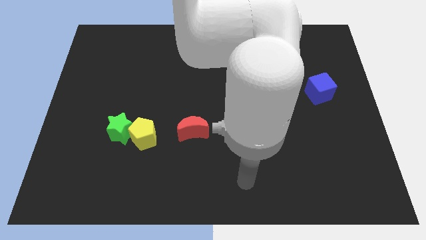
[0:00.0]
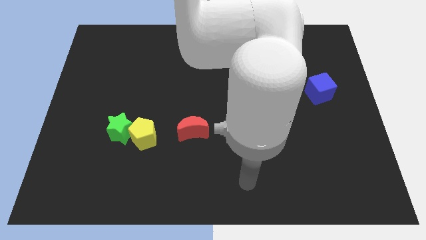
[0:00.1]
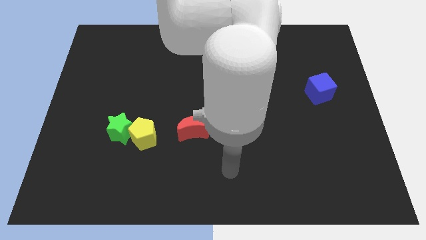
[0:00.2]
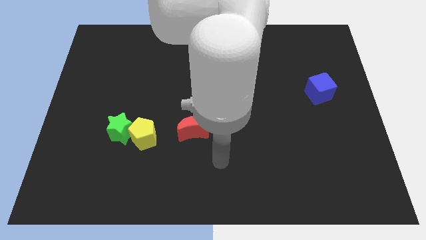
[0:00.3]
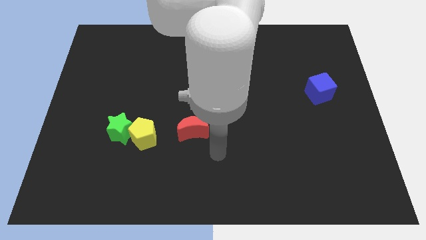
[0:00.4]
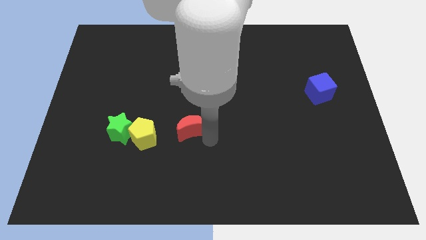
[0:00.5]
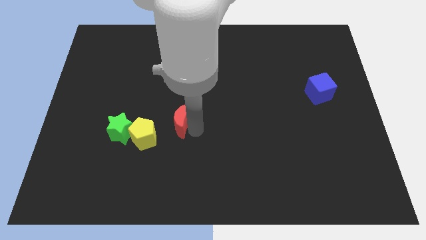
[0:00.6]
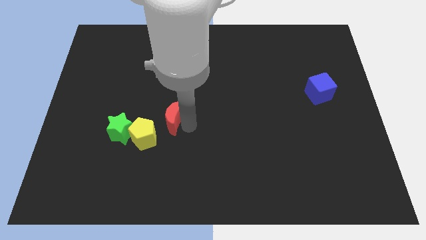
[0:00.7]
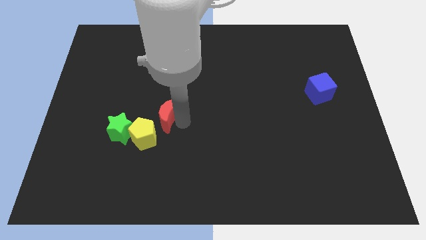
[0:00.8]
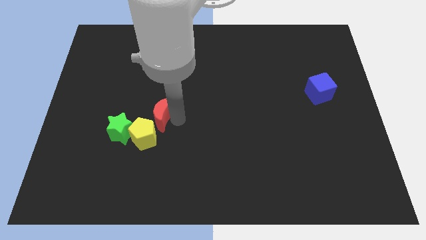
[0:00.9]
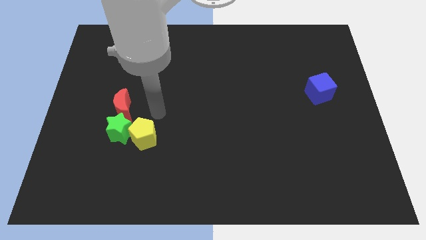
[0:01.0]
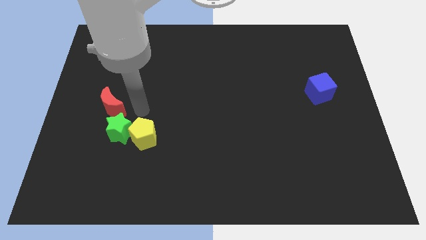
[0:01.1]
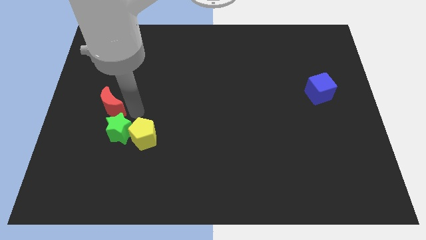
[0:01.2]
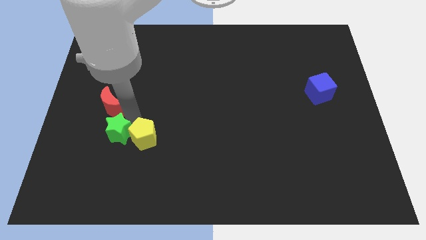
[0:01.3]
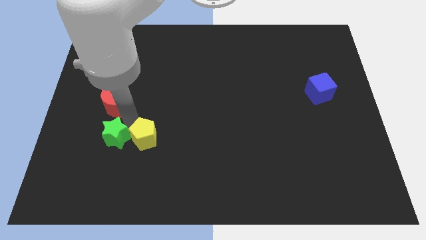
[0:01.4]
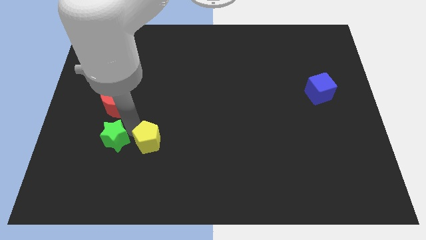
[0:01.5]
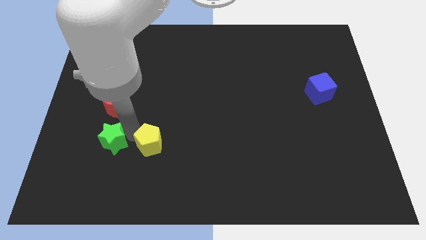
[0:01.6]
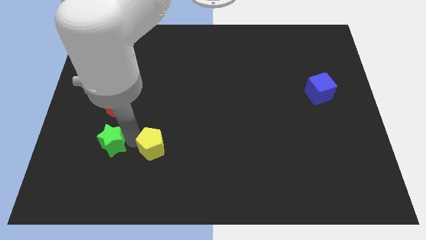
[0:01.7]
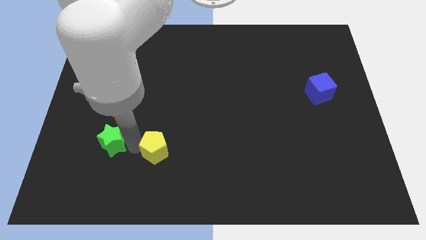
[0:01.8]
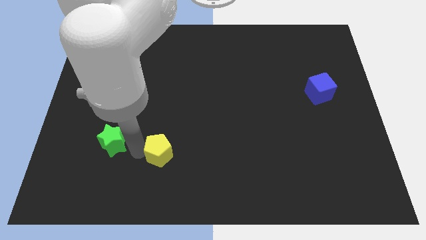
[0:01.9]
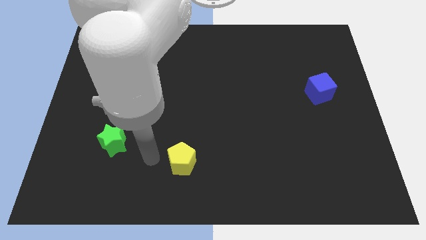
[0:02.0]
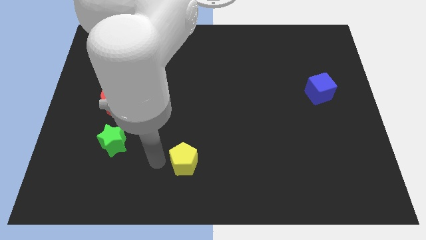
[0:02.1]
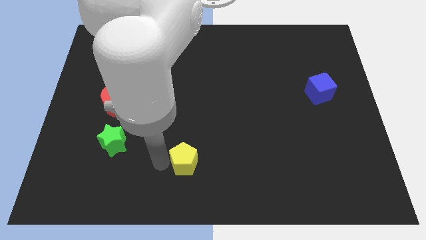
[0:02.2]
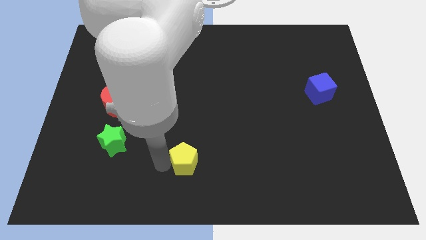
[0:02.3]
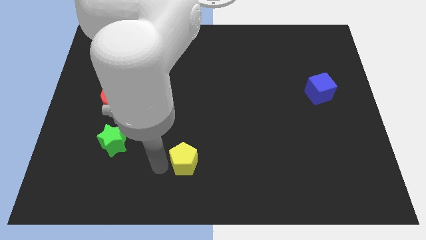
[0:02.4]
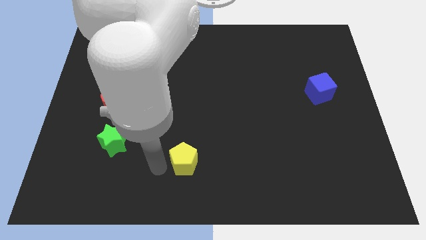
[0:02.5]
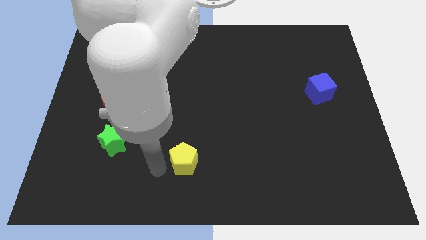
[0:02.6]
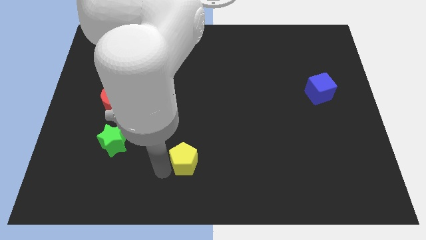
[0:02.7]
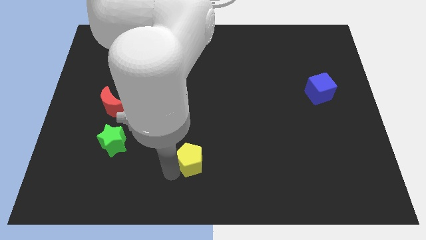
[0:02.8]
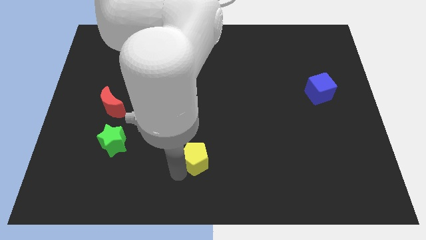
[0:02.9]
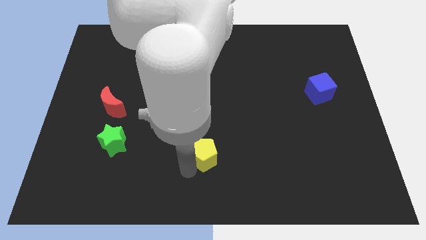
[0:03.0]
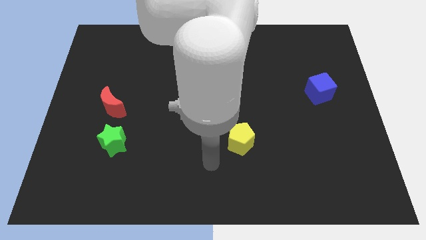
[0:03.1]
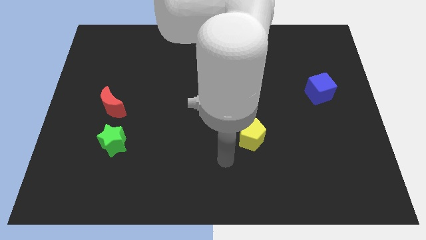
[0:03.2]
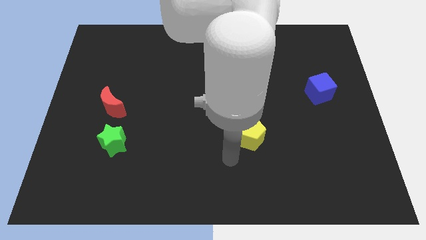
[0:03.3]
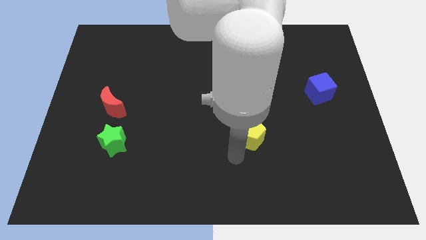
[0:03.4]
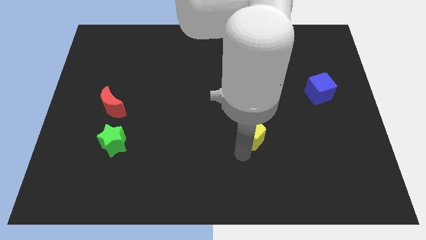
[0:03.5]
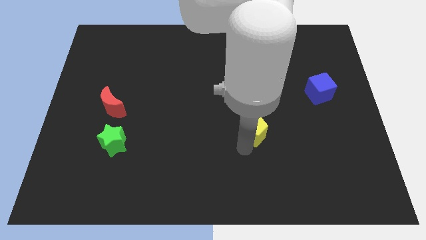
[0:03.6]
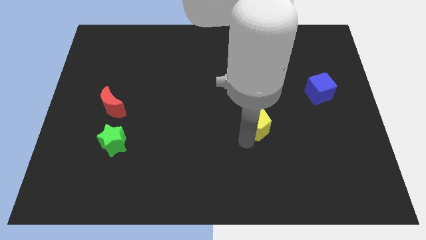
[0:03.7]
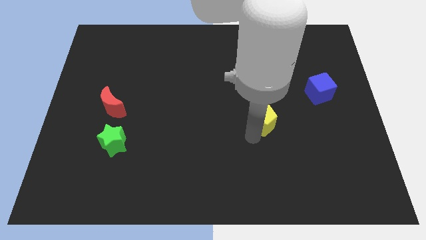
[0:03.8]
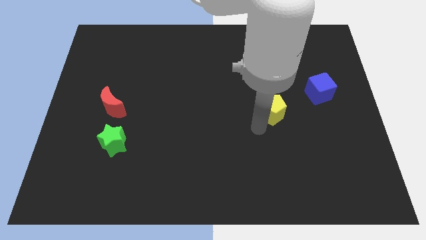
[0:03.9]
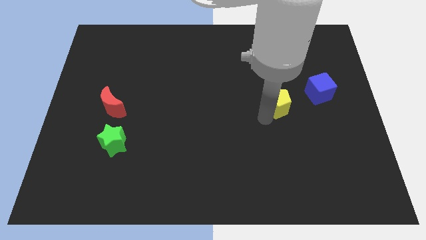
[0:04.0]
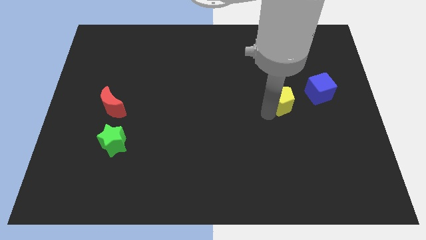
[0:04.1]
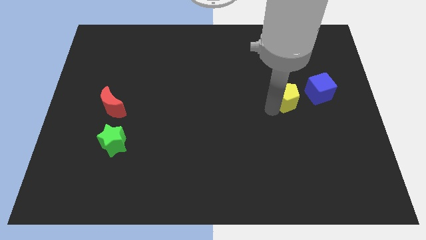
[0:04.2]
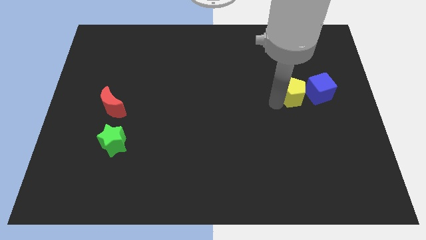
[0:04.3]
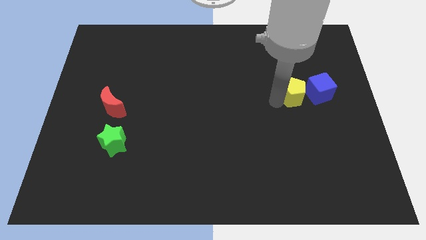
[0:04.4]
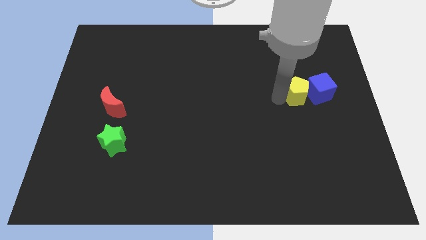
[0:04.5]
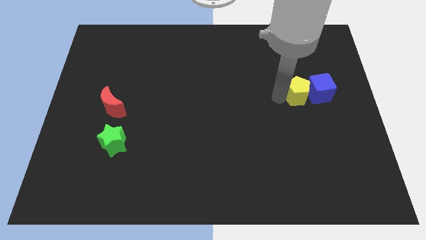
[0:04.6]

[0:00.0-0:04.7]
push the yellow pentagon towards the blue cube

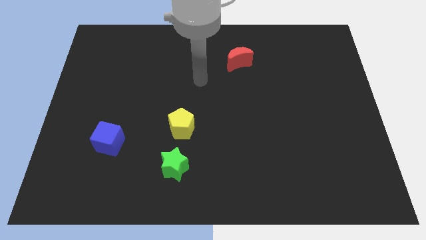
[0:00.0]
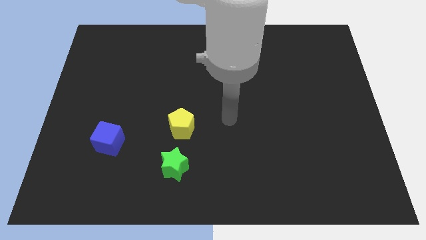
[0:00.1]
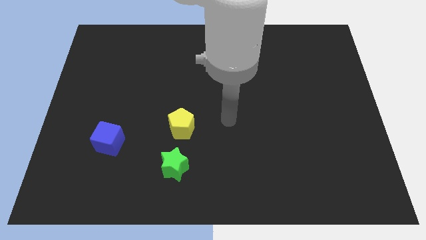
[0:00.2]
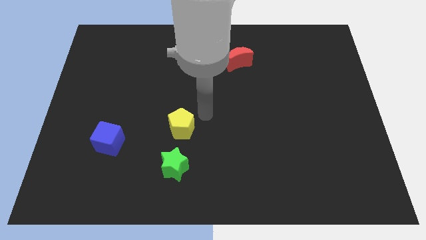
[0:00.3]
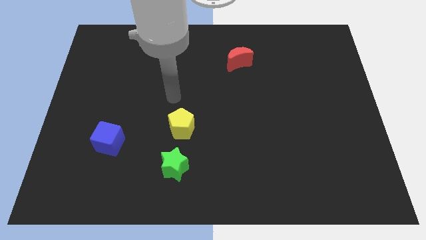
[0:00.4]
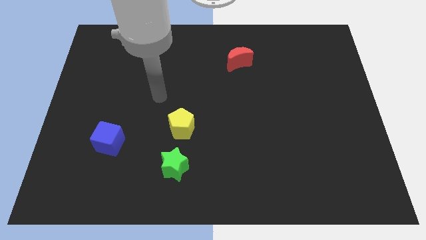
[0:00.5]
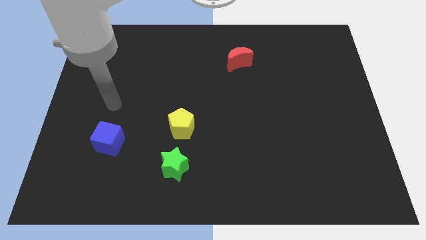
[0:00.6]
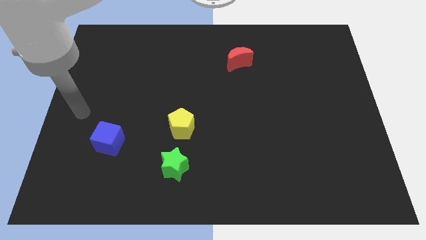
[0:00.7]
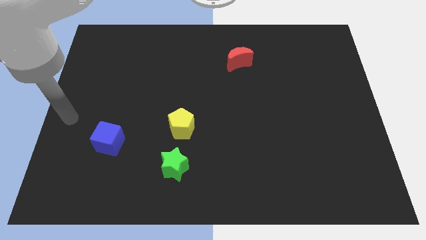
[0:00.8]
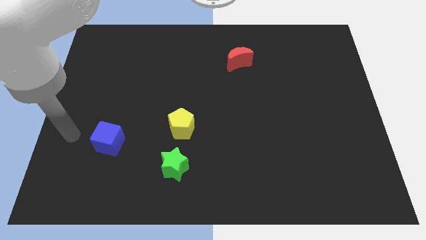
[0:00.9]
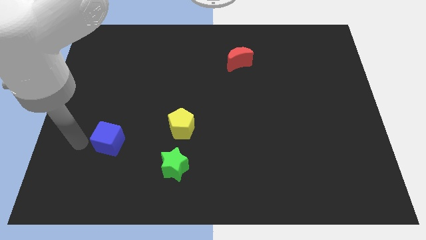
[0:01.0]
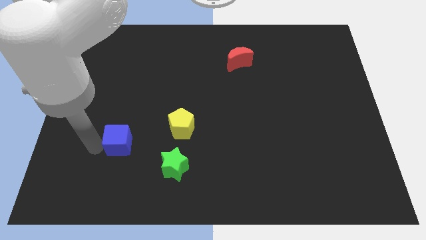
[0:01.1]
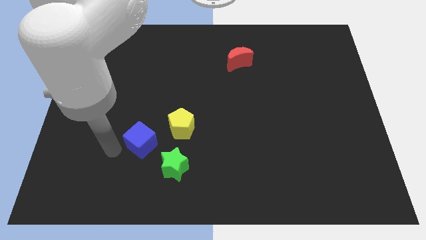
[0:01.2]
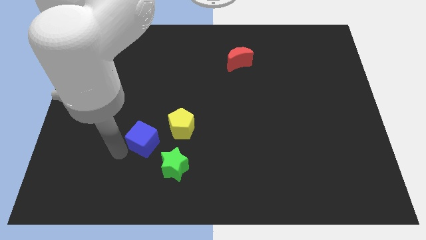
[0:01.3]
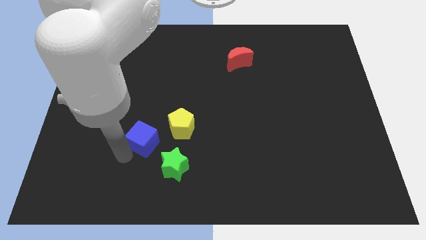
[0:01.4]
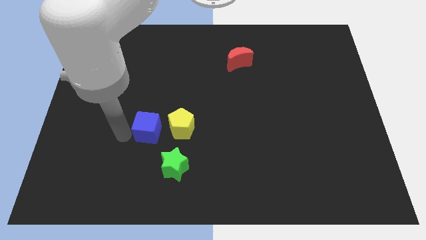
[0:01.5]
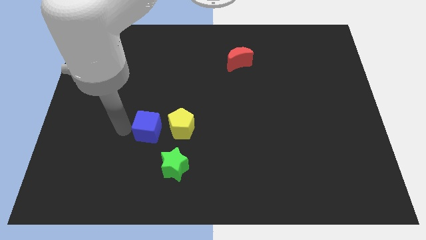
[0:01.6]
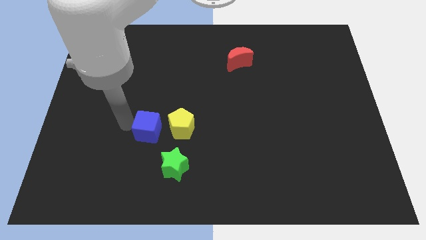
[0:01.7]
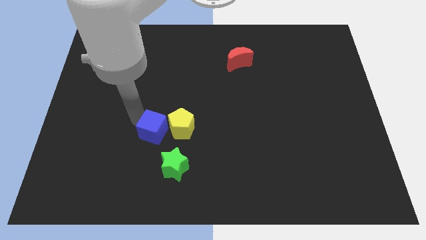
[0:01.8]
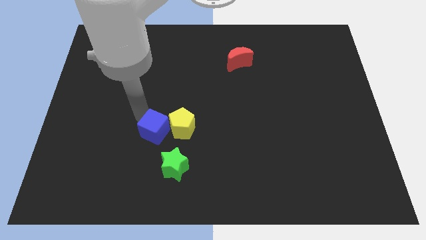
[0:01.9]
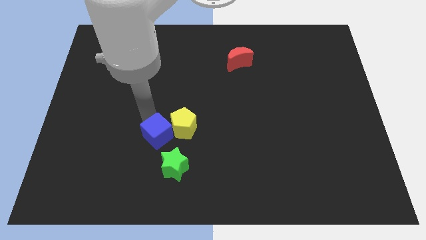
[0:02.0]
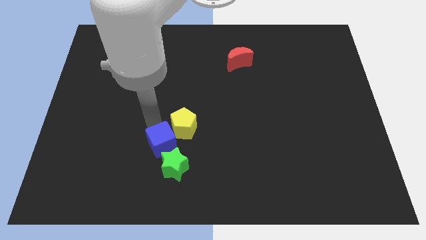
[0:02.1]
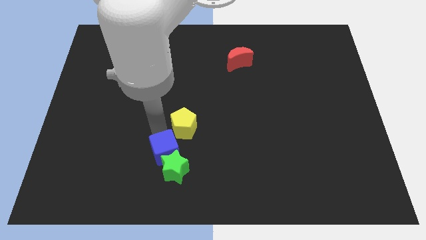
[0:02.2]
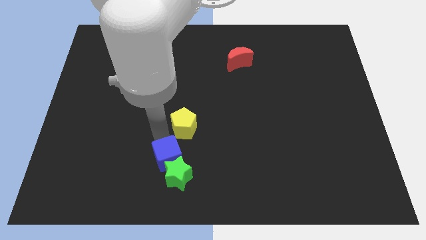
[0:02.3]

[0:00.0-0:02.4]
push the blue block next to the green block

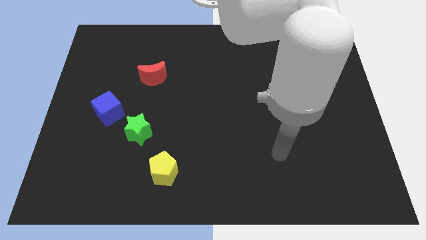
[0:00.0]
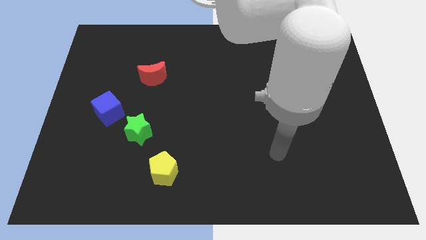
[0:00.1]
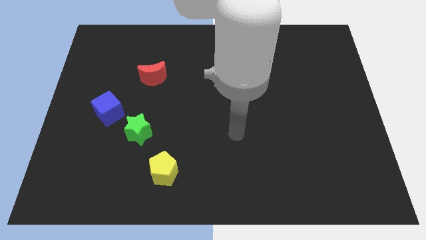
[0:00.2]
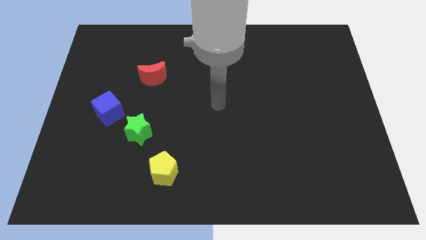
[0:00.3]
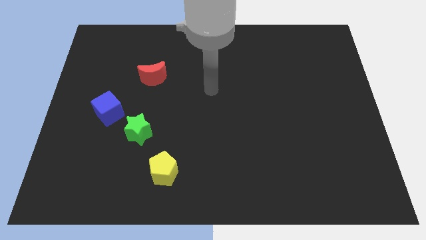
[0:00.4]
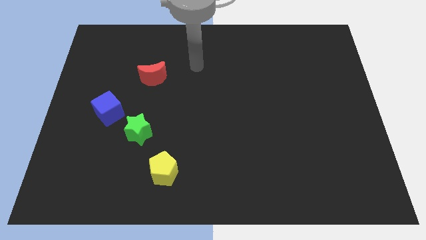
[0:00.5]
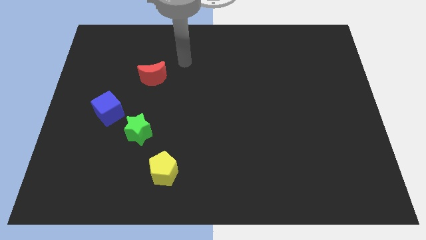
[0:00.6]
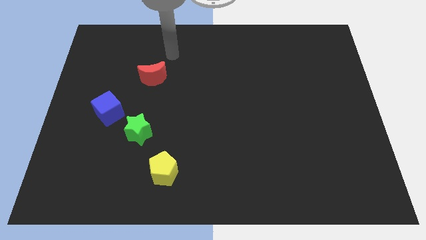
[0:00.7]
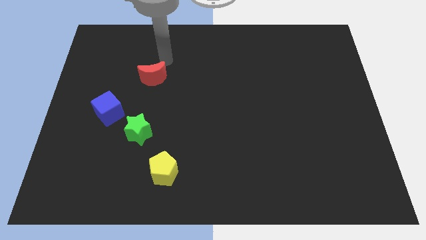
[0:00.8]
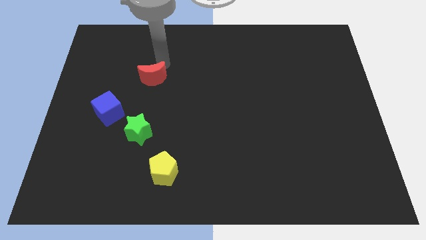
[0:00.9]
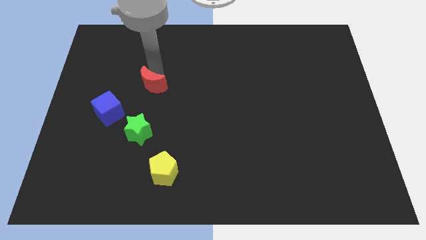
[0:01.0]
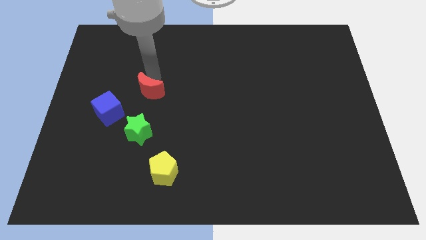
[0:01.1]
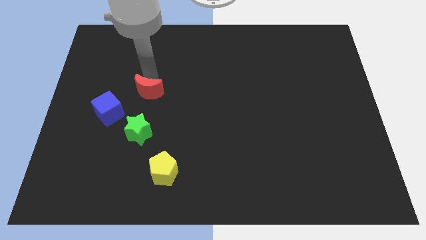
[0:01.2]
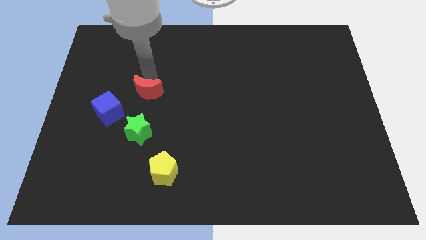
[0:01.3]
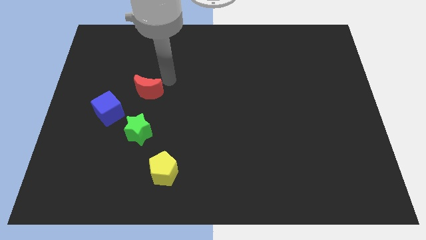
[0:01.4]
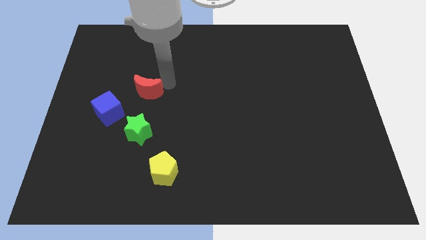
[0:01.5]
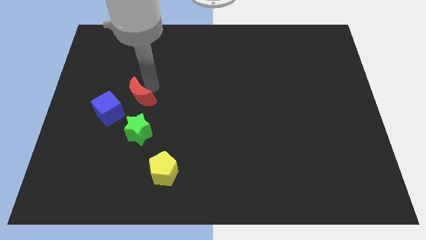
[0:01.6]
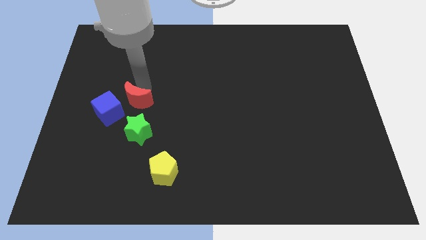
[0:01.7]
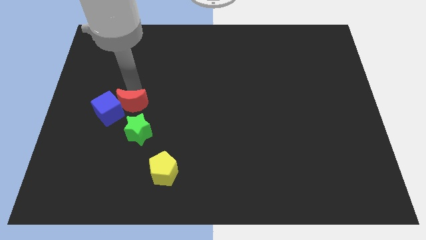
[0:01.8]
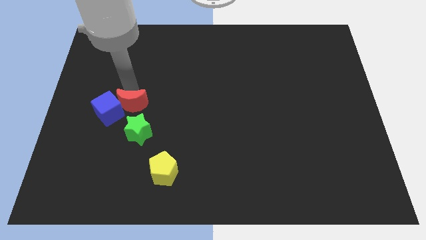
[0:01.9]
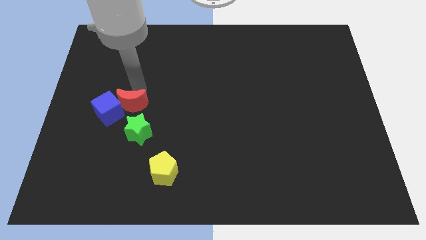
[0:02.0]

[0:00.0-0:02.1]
push the red moon close to the blue block
